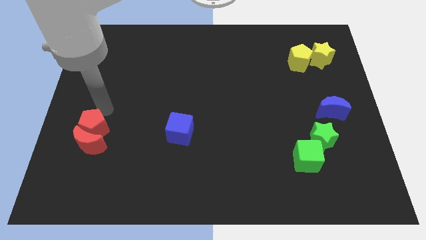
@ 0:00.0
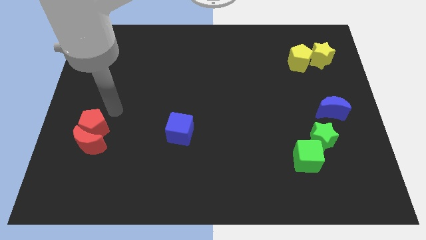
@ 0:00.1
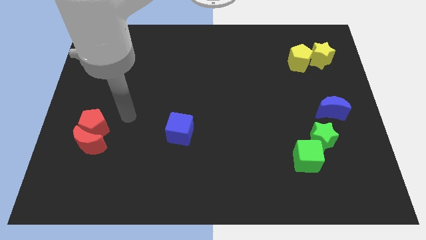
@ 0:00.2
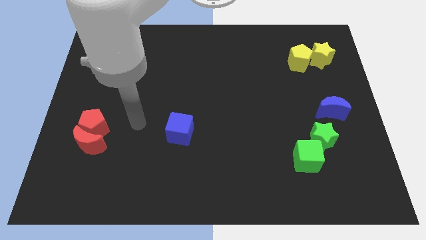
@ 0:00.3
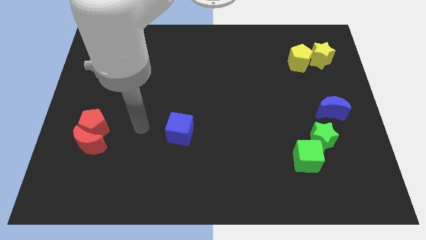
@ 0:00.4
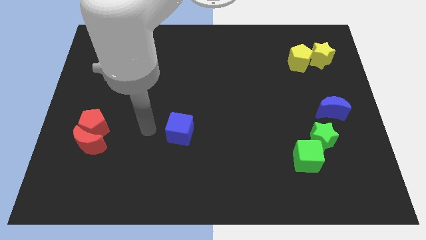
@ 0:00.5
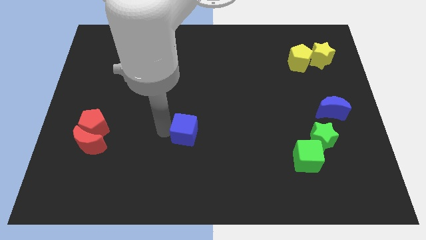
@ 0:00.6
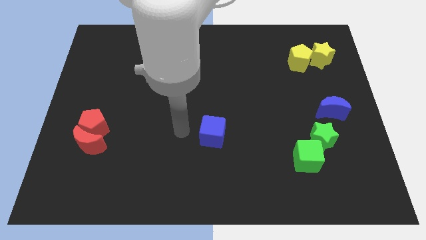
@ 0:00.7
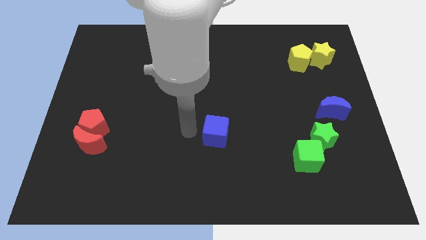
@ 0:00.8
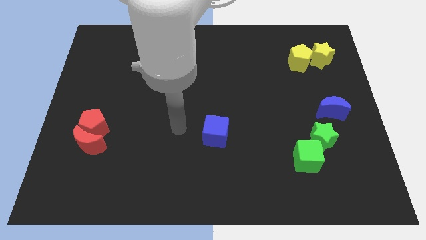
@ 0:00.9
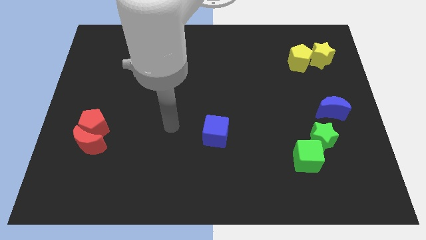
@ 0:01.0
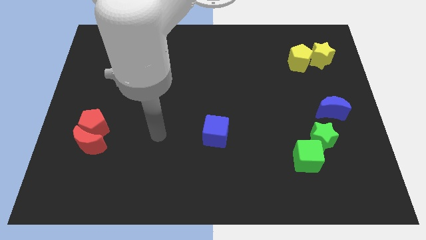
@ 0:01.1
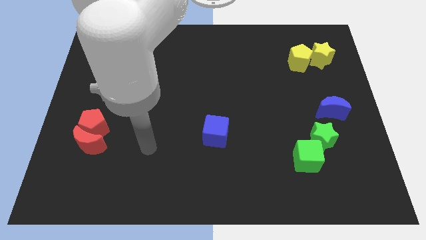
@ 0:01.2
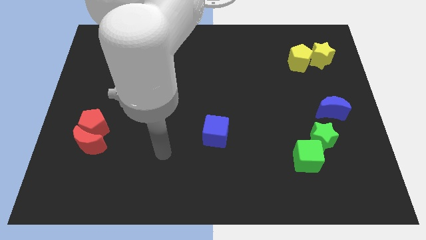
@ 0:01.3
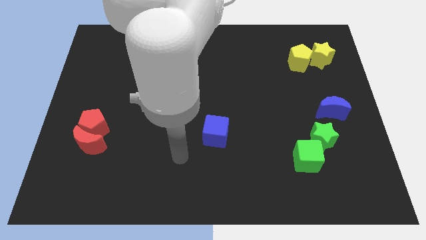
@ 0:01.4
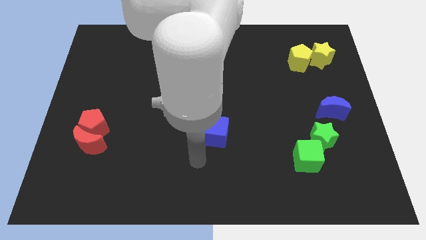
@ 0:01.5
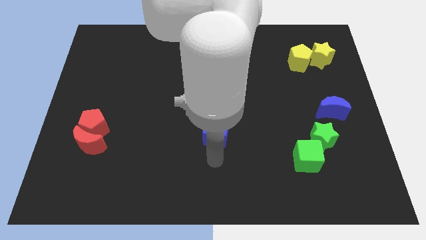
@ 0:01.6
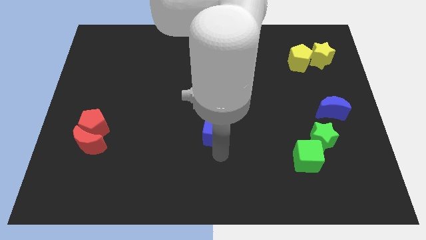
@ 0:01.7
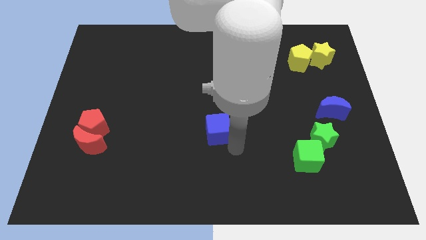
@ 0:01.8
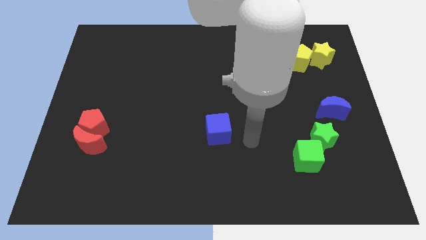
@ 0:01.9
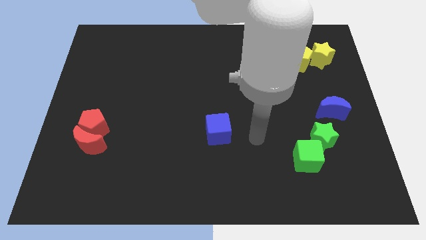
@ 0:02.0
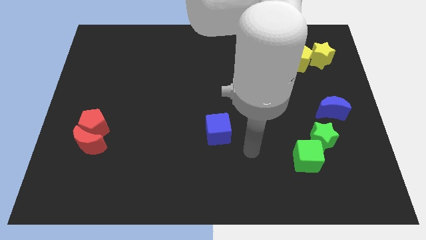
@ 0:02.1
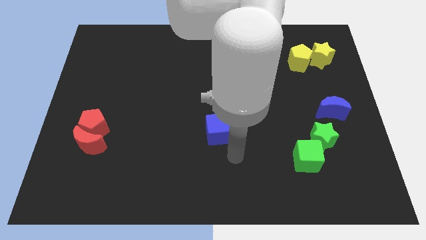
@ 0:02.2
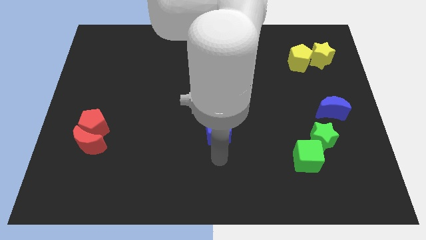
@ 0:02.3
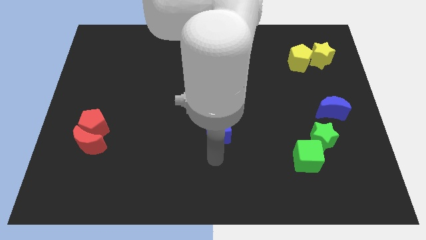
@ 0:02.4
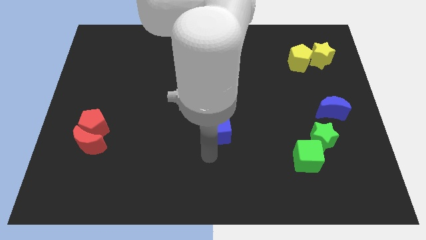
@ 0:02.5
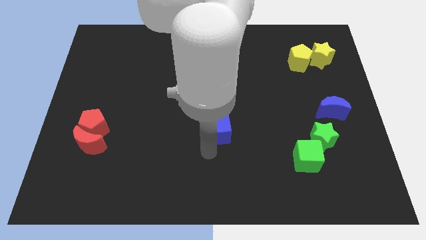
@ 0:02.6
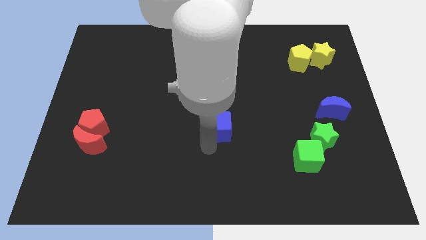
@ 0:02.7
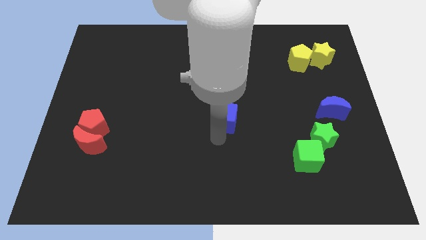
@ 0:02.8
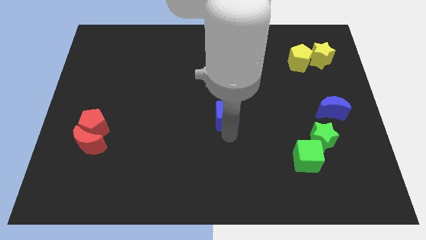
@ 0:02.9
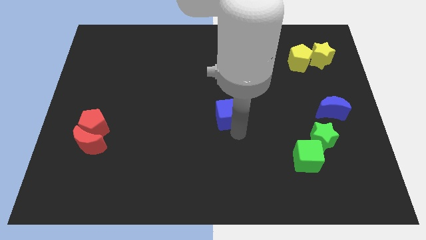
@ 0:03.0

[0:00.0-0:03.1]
move the blue cube to the center of the board

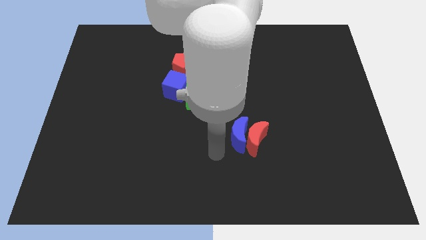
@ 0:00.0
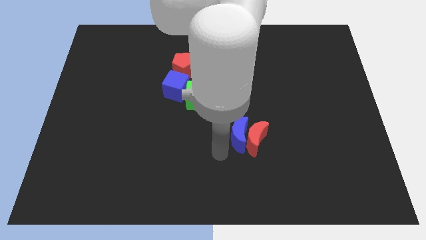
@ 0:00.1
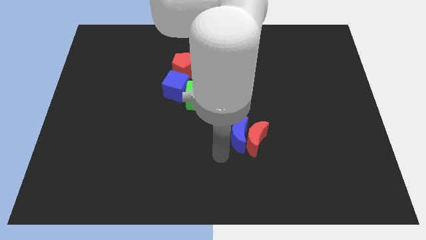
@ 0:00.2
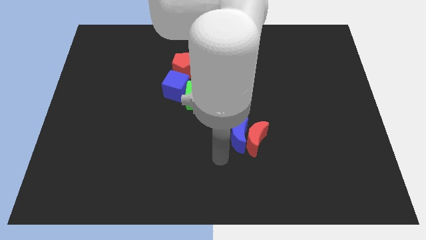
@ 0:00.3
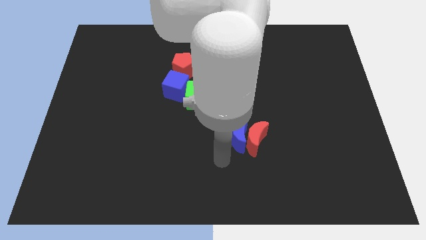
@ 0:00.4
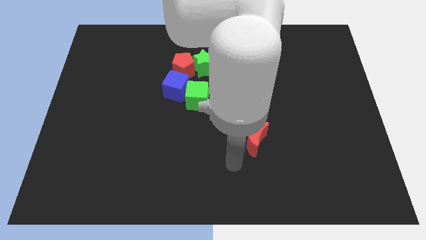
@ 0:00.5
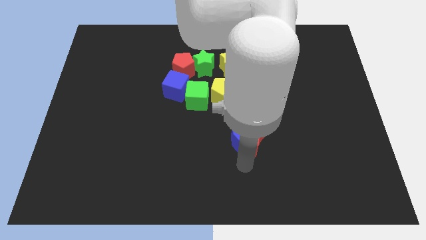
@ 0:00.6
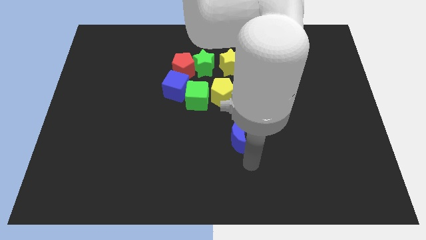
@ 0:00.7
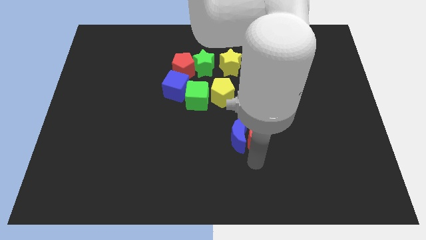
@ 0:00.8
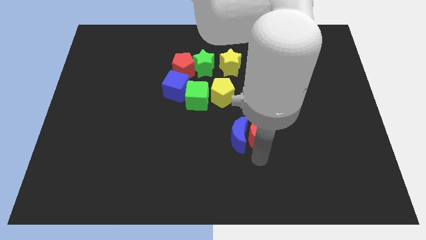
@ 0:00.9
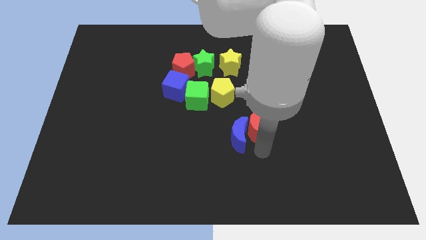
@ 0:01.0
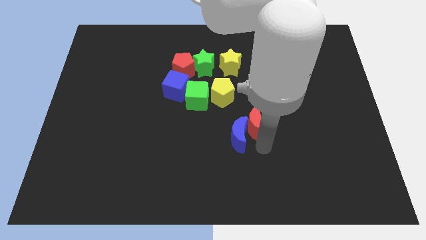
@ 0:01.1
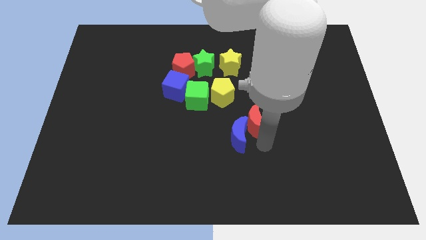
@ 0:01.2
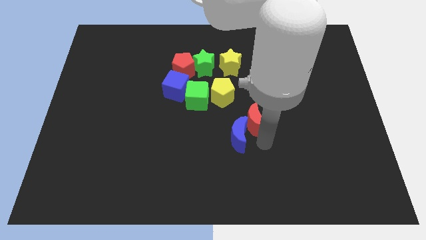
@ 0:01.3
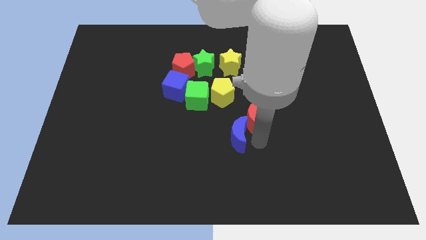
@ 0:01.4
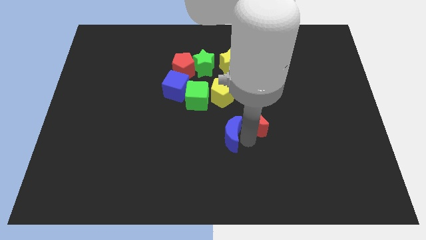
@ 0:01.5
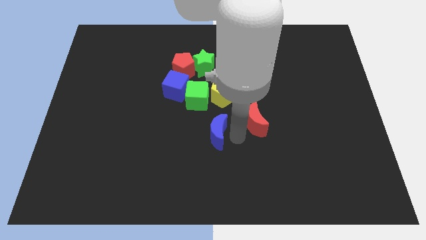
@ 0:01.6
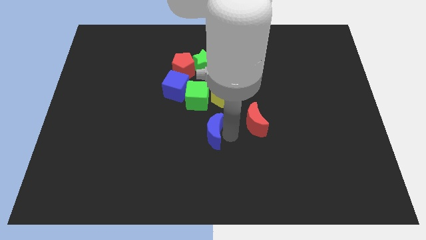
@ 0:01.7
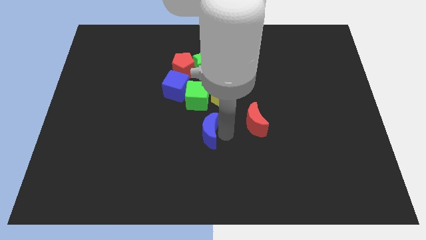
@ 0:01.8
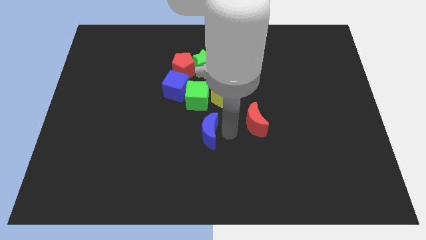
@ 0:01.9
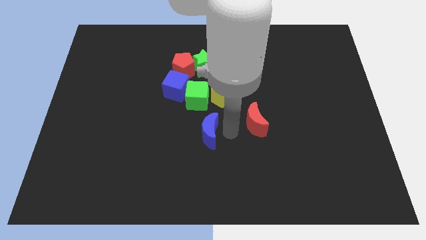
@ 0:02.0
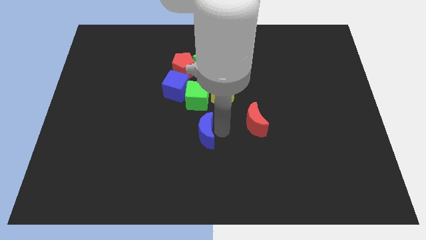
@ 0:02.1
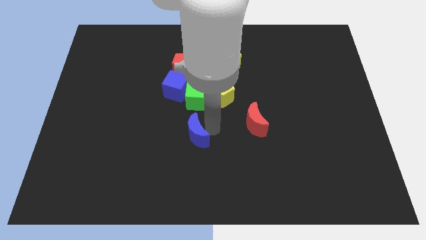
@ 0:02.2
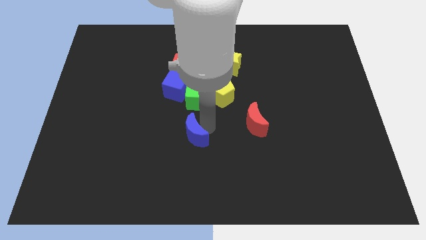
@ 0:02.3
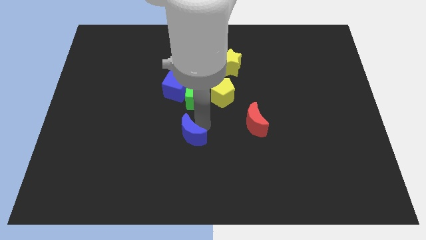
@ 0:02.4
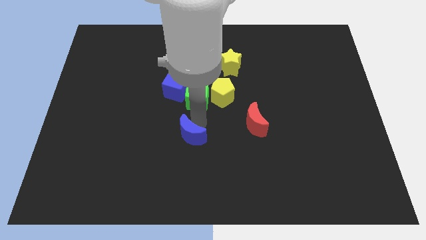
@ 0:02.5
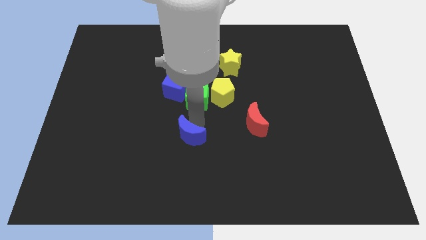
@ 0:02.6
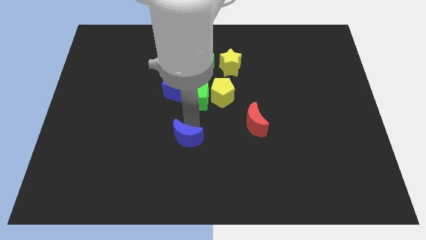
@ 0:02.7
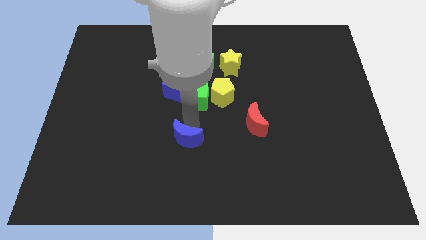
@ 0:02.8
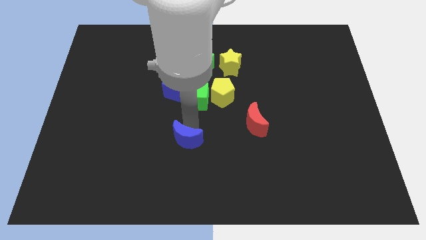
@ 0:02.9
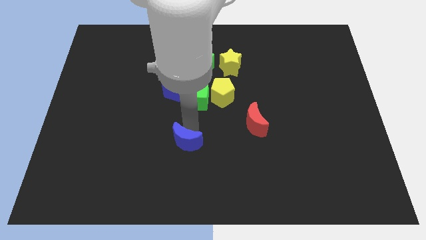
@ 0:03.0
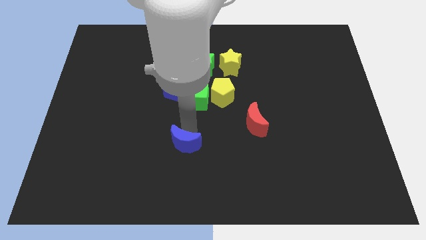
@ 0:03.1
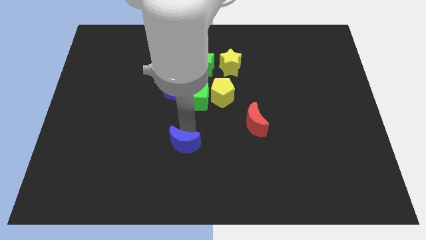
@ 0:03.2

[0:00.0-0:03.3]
move the blue moon slightly left

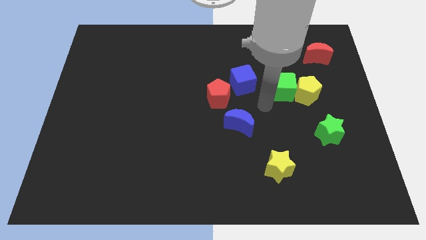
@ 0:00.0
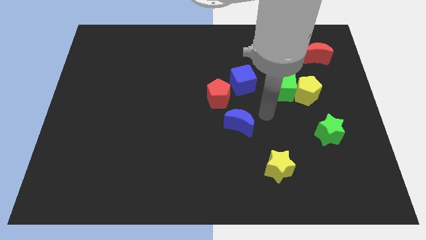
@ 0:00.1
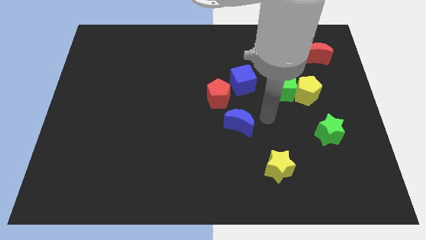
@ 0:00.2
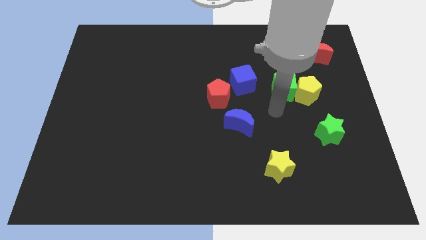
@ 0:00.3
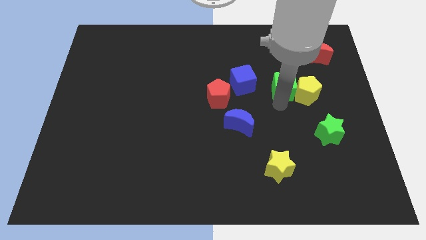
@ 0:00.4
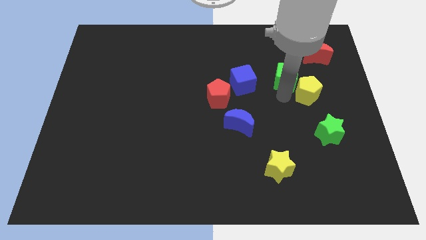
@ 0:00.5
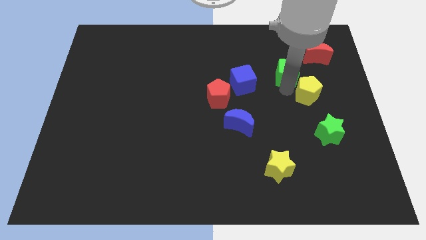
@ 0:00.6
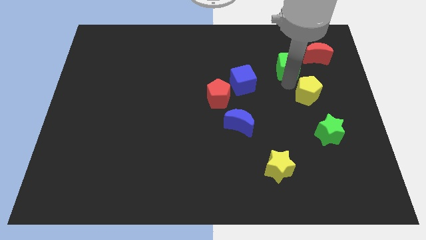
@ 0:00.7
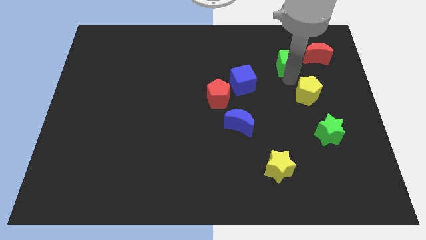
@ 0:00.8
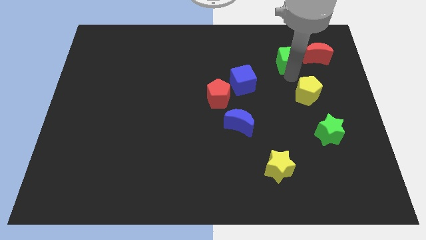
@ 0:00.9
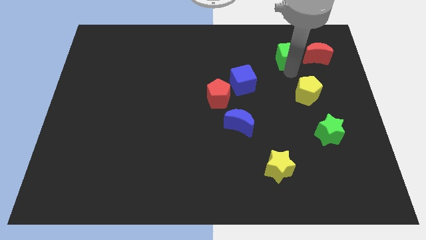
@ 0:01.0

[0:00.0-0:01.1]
push green cube left to red moon

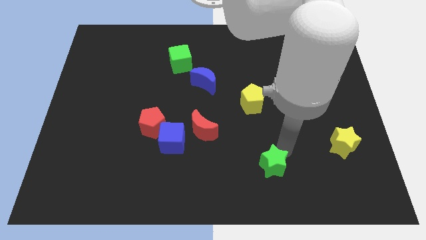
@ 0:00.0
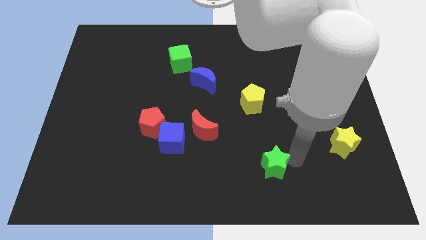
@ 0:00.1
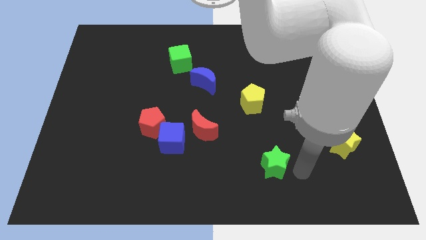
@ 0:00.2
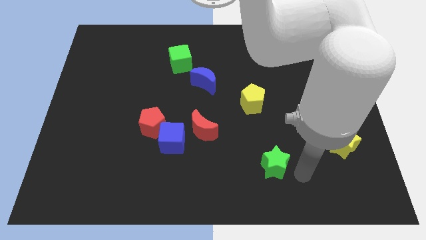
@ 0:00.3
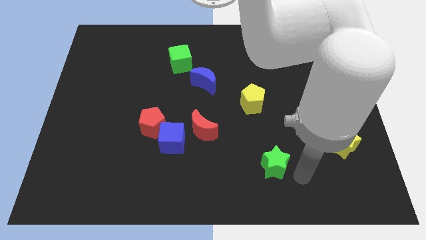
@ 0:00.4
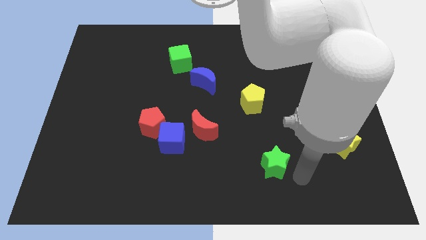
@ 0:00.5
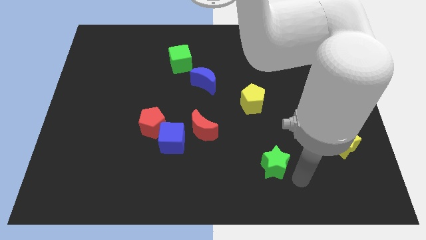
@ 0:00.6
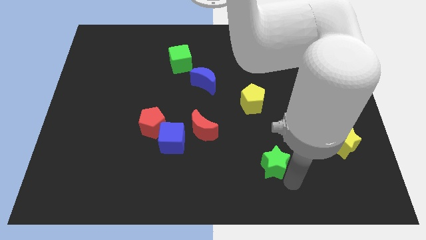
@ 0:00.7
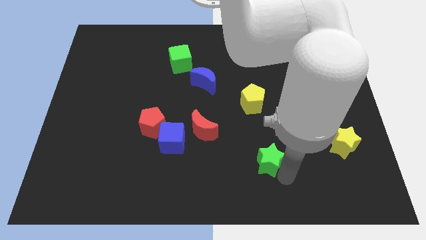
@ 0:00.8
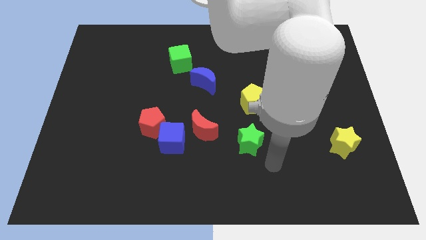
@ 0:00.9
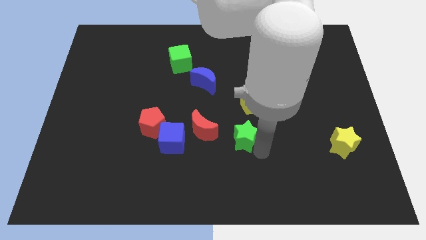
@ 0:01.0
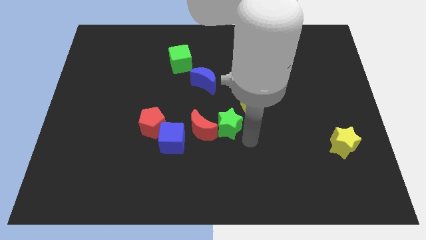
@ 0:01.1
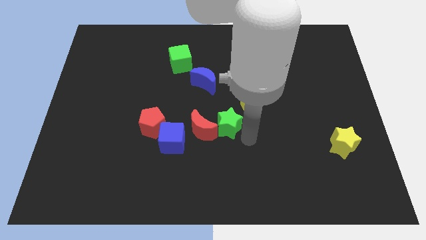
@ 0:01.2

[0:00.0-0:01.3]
bring the green star to the bottom center of the board
